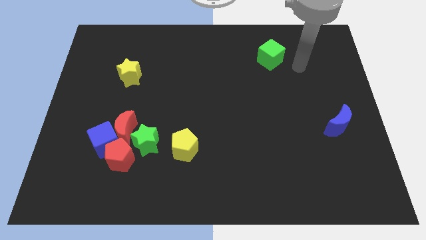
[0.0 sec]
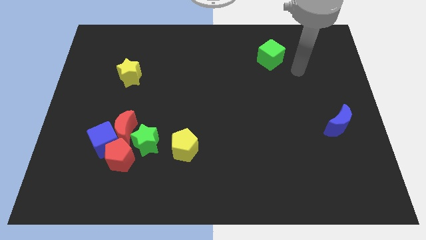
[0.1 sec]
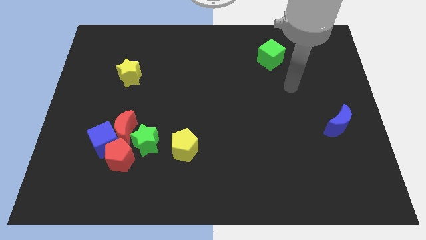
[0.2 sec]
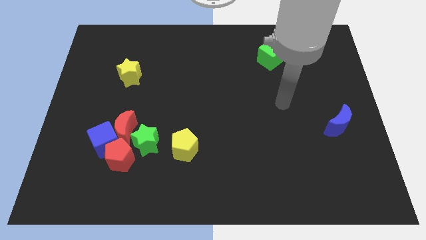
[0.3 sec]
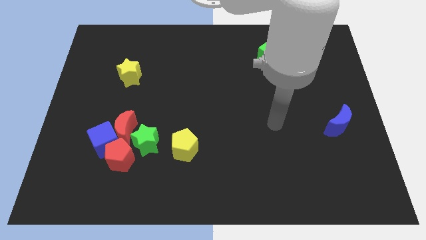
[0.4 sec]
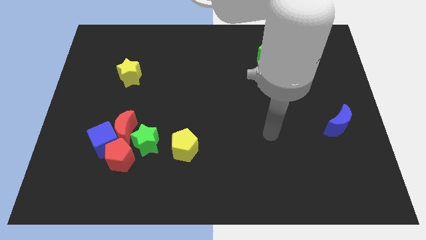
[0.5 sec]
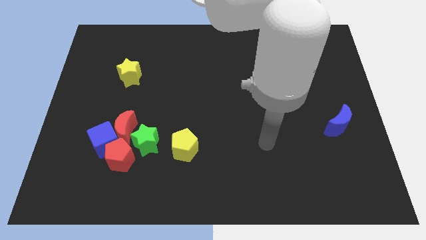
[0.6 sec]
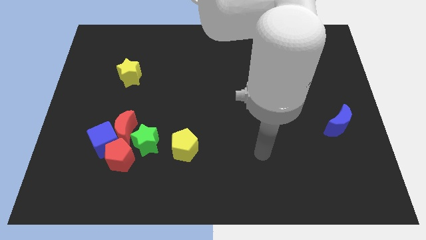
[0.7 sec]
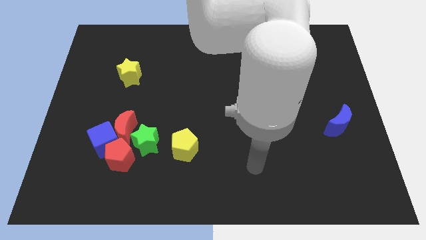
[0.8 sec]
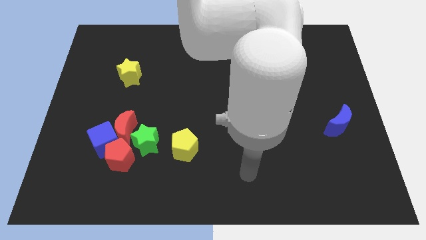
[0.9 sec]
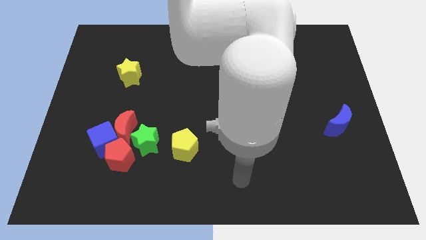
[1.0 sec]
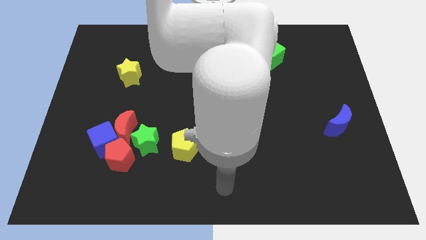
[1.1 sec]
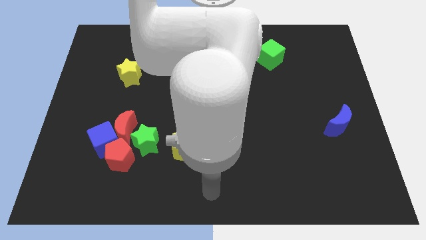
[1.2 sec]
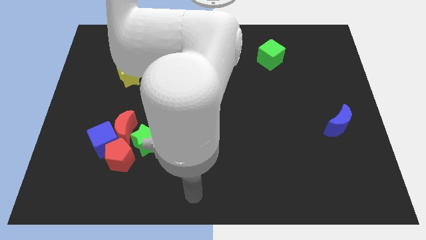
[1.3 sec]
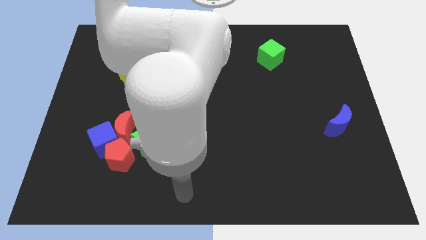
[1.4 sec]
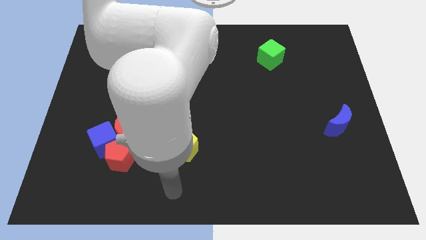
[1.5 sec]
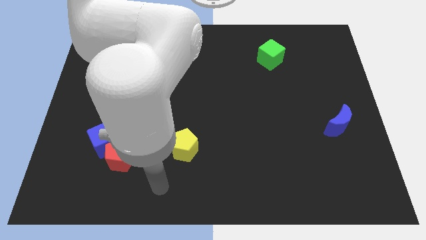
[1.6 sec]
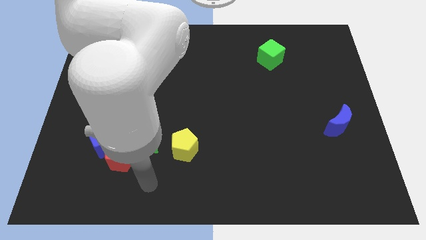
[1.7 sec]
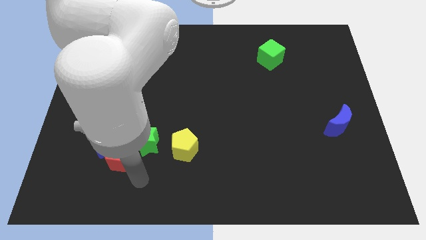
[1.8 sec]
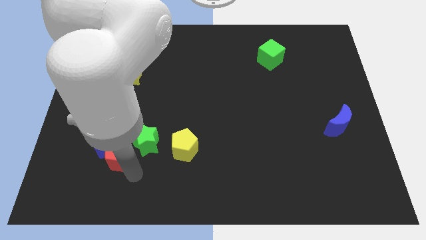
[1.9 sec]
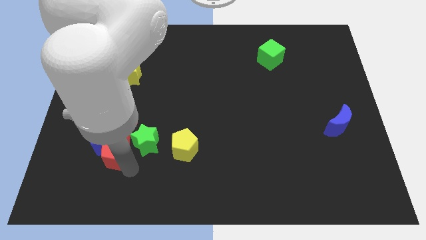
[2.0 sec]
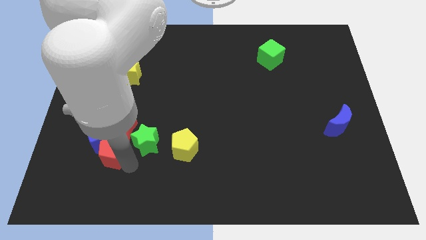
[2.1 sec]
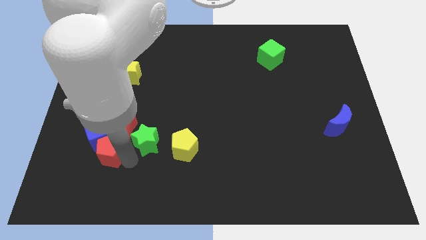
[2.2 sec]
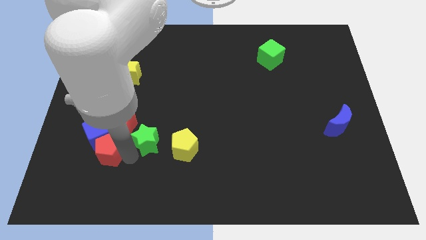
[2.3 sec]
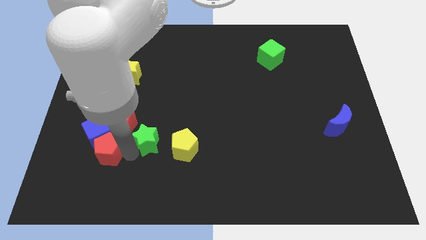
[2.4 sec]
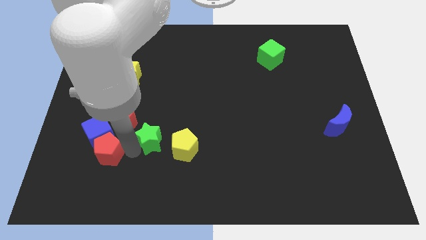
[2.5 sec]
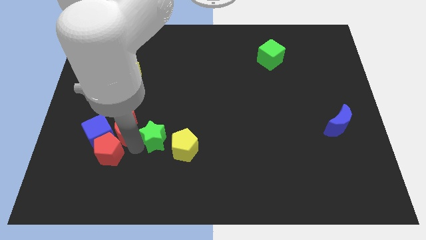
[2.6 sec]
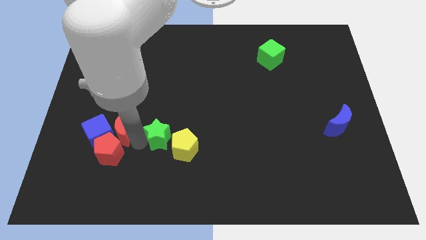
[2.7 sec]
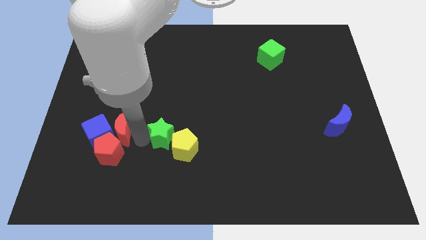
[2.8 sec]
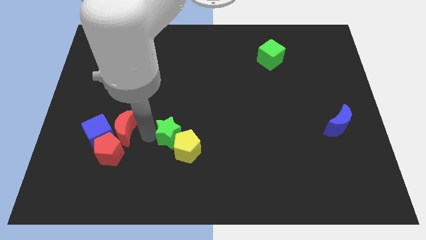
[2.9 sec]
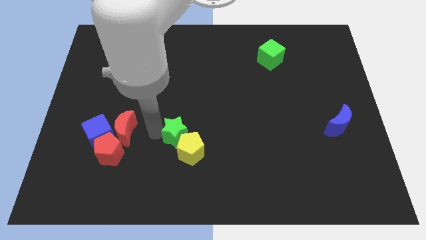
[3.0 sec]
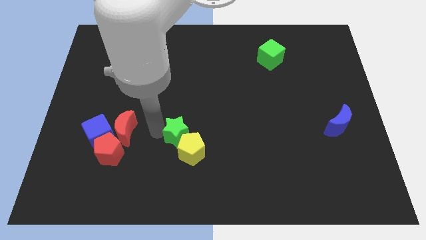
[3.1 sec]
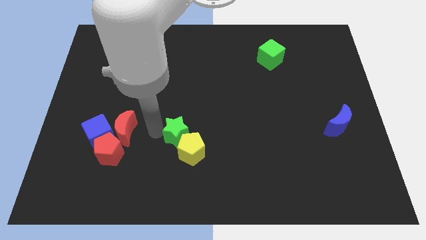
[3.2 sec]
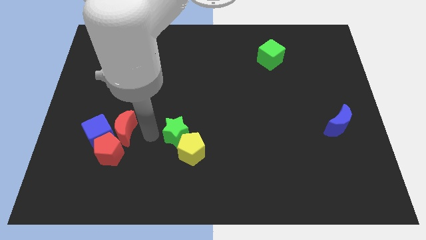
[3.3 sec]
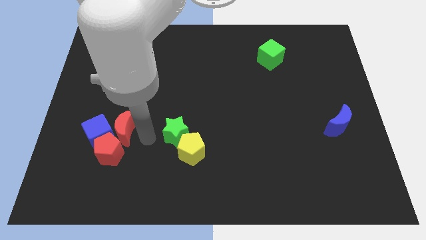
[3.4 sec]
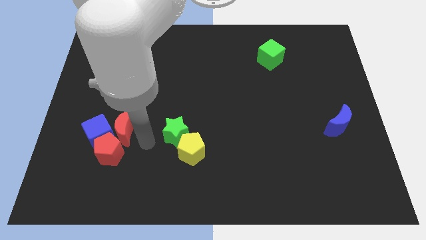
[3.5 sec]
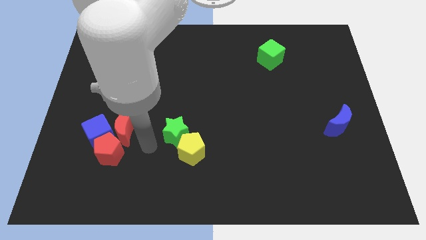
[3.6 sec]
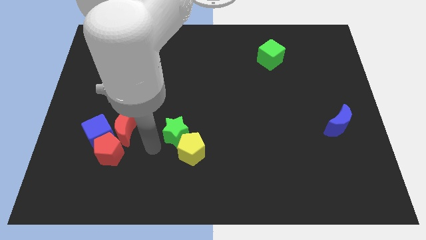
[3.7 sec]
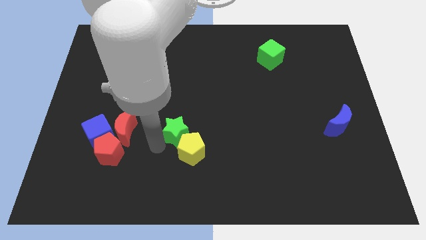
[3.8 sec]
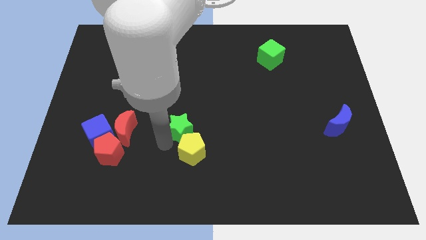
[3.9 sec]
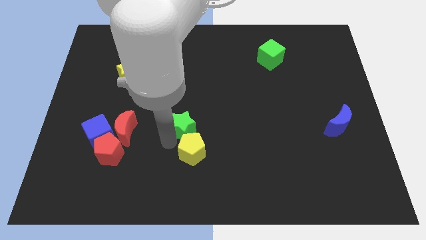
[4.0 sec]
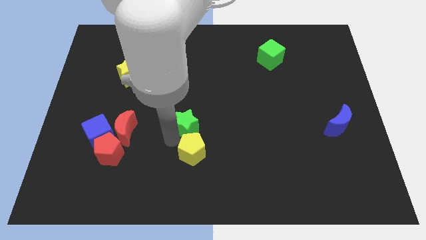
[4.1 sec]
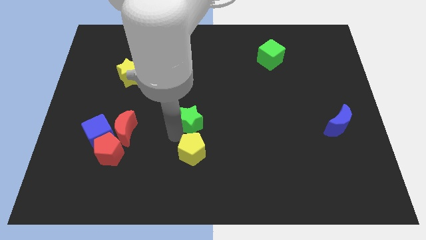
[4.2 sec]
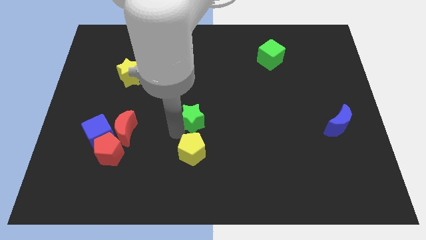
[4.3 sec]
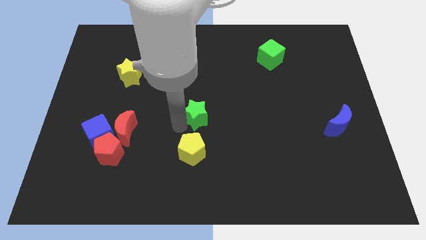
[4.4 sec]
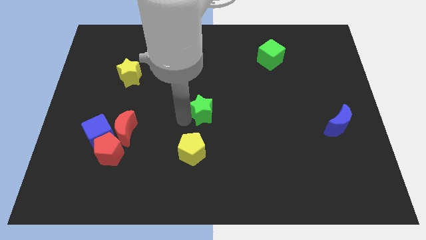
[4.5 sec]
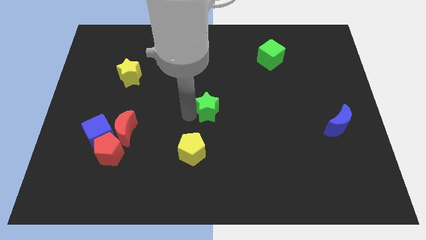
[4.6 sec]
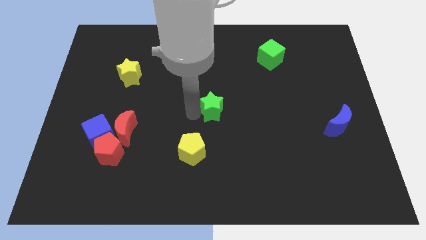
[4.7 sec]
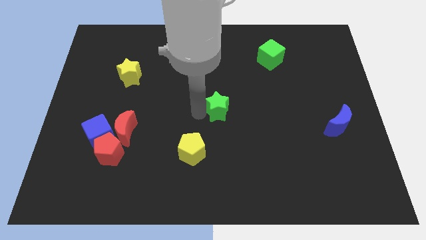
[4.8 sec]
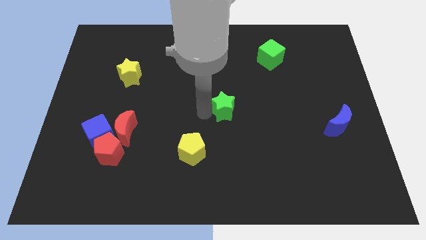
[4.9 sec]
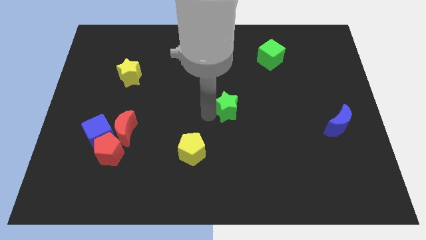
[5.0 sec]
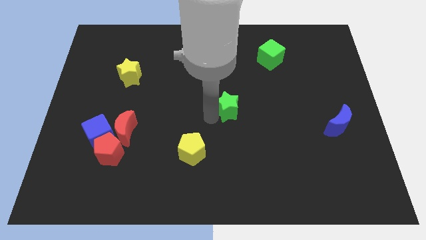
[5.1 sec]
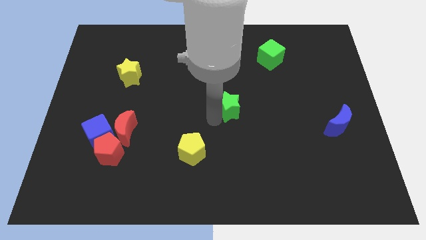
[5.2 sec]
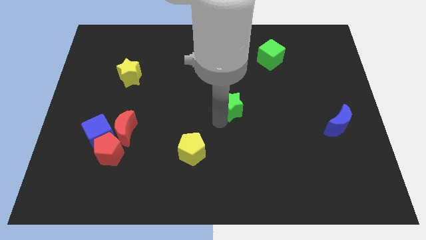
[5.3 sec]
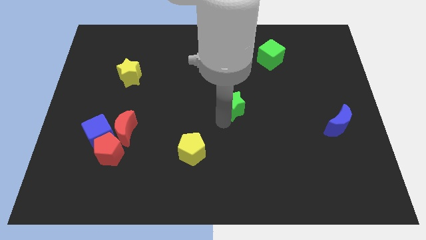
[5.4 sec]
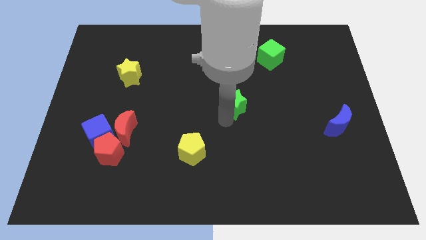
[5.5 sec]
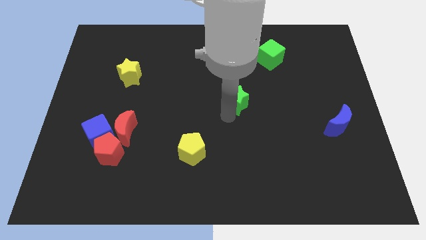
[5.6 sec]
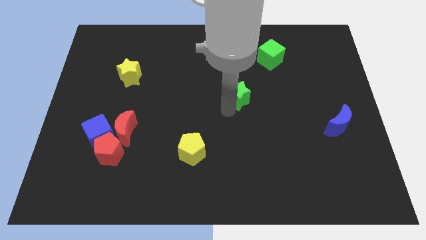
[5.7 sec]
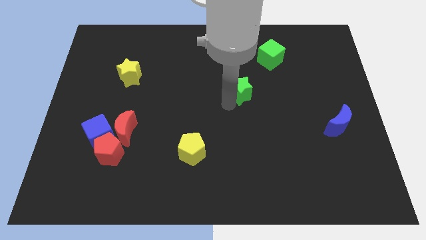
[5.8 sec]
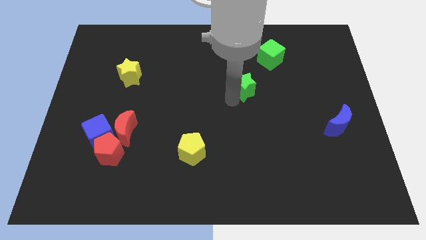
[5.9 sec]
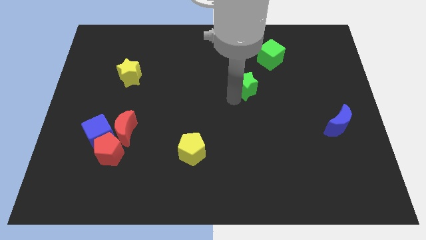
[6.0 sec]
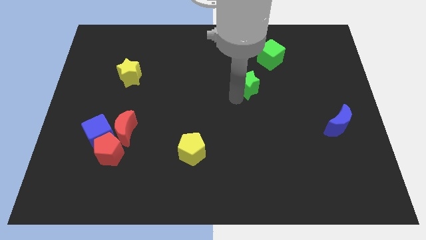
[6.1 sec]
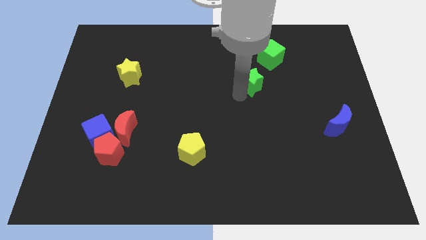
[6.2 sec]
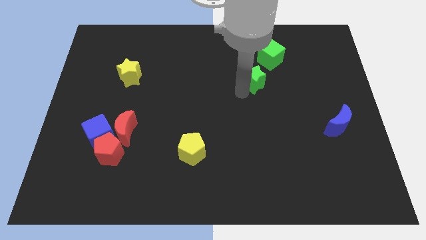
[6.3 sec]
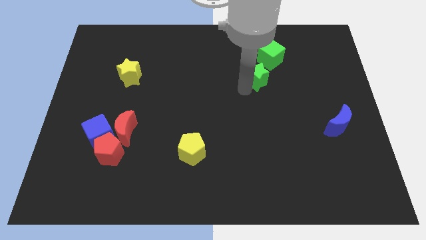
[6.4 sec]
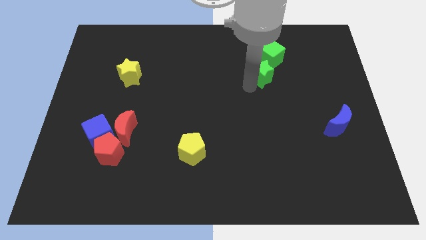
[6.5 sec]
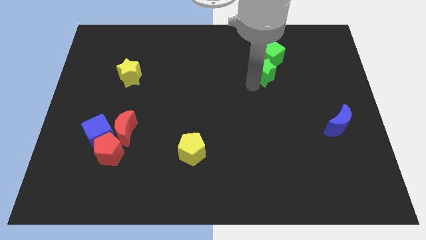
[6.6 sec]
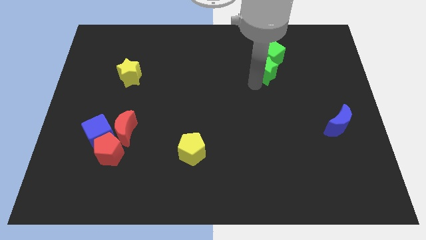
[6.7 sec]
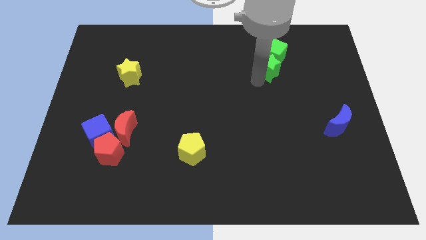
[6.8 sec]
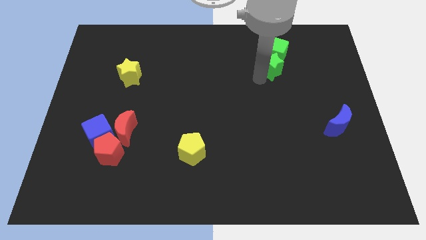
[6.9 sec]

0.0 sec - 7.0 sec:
put the green star towards the green cube

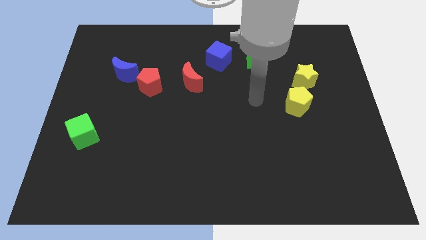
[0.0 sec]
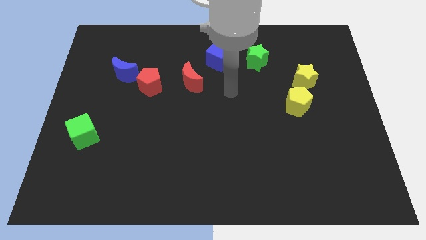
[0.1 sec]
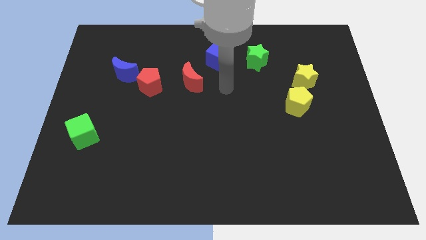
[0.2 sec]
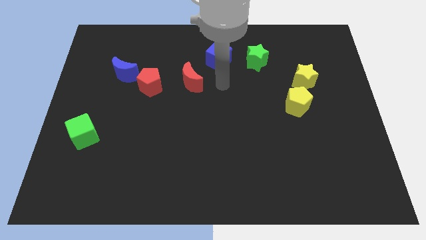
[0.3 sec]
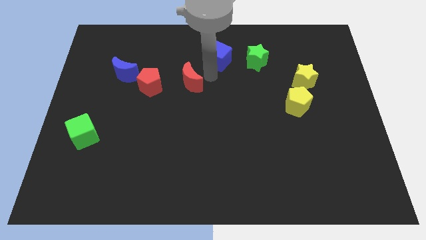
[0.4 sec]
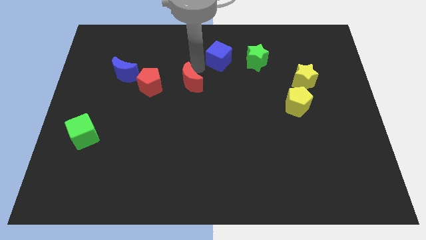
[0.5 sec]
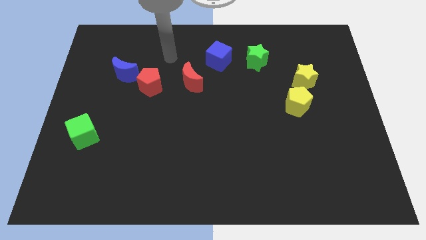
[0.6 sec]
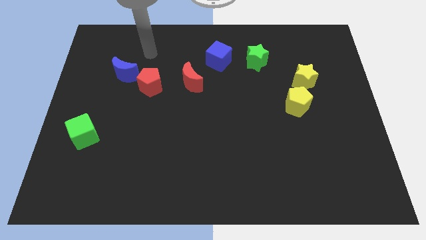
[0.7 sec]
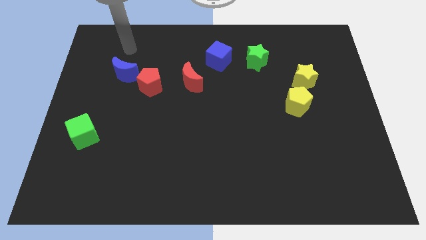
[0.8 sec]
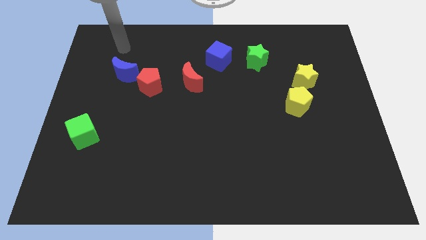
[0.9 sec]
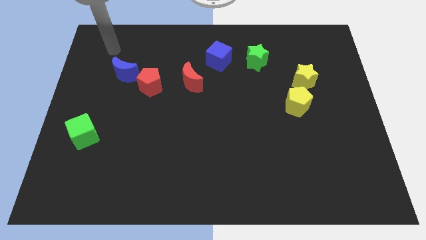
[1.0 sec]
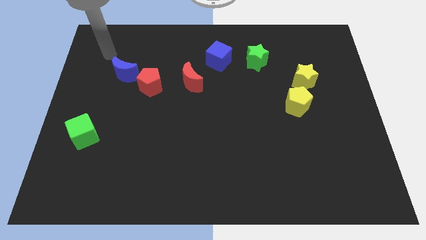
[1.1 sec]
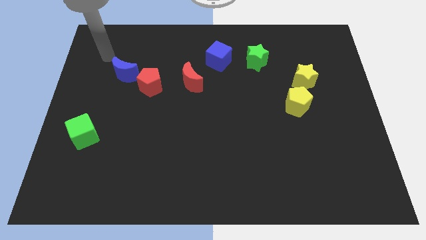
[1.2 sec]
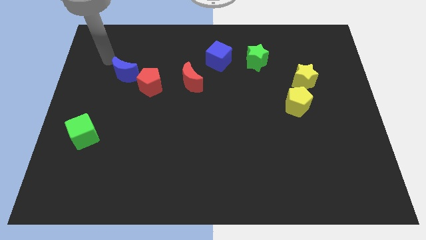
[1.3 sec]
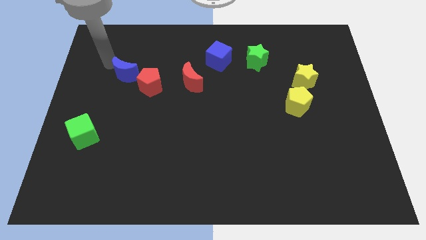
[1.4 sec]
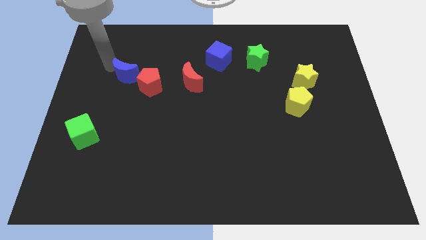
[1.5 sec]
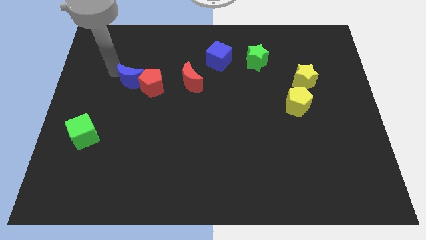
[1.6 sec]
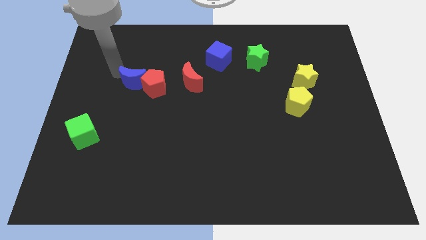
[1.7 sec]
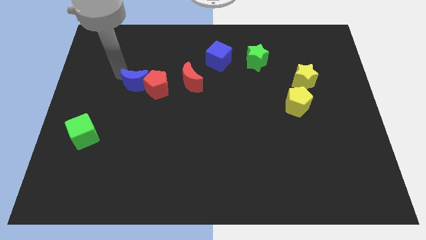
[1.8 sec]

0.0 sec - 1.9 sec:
move the blue moon next to the red pentagon
